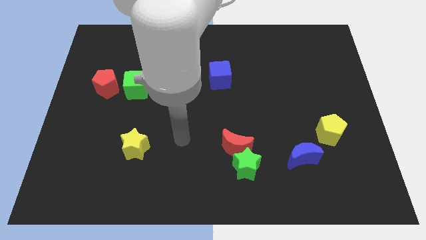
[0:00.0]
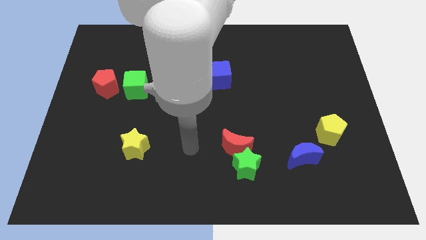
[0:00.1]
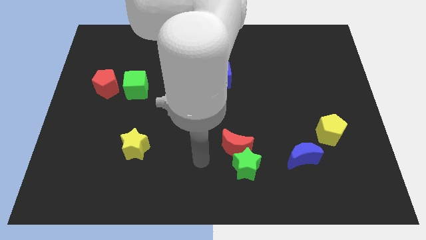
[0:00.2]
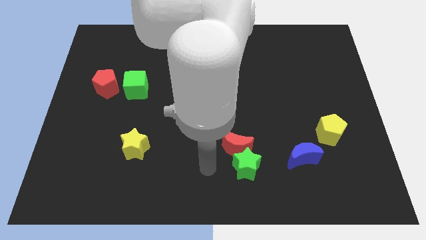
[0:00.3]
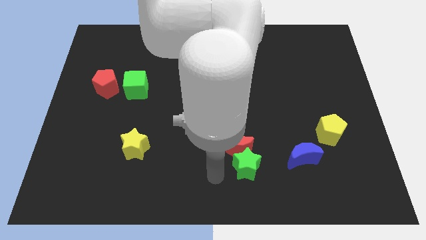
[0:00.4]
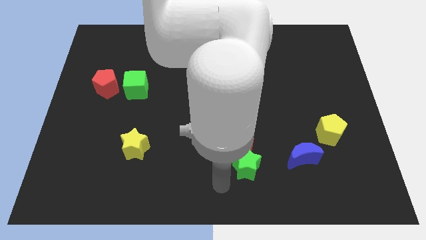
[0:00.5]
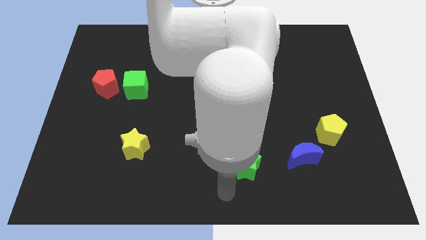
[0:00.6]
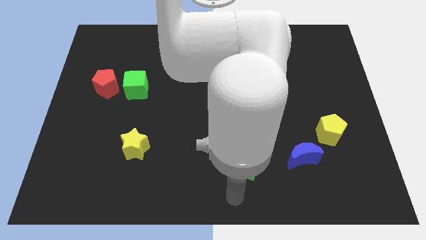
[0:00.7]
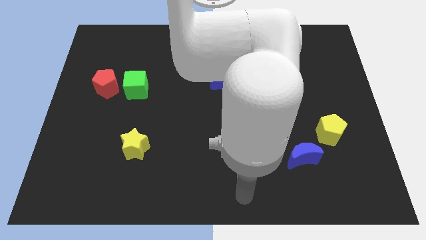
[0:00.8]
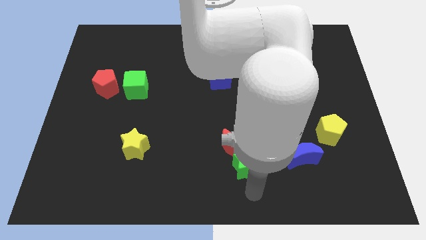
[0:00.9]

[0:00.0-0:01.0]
place the arm below the green star

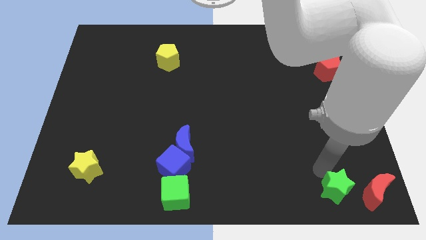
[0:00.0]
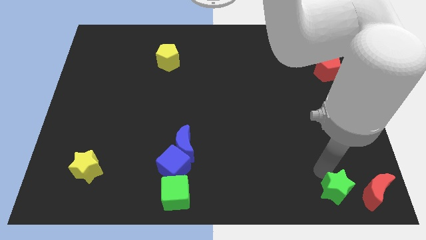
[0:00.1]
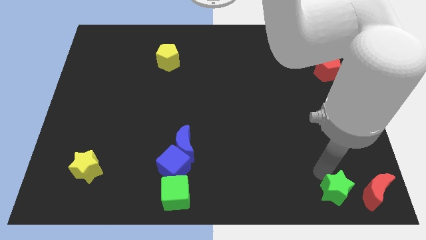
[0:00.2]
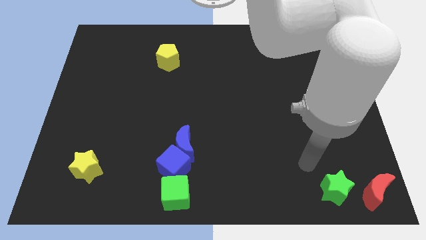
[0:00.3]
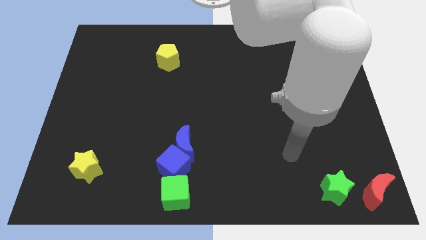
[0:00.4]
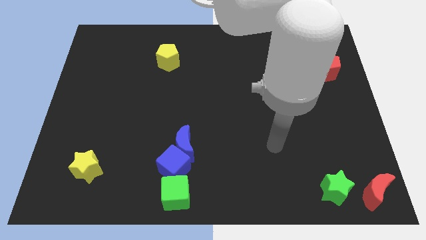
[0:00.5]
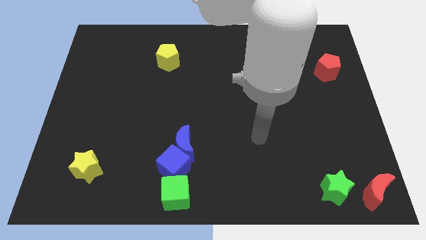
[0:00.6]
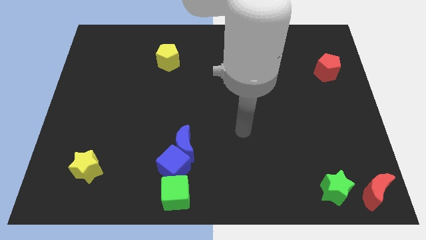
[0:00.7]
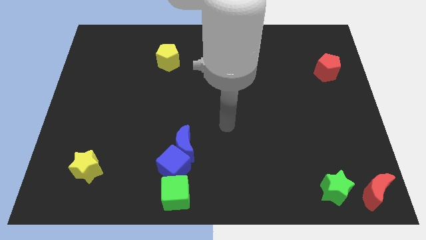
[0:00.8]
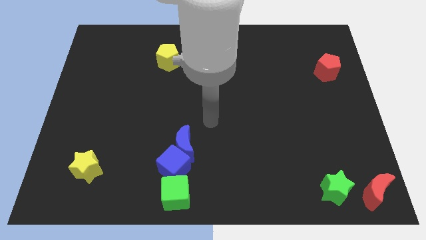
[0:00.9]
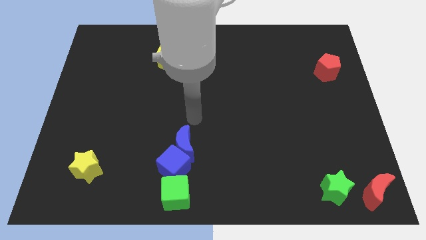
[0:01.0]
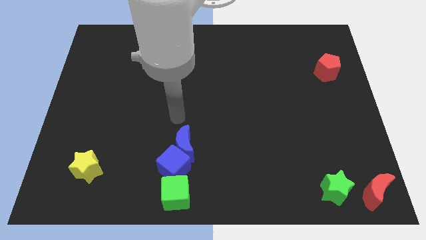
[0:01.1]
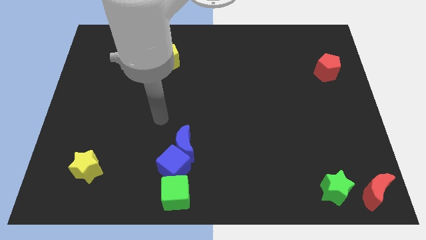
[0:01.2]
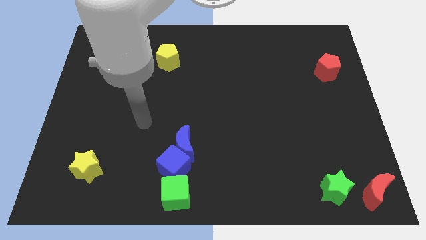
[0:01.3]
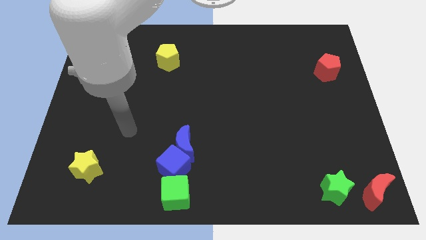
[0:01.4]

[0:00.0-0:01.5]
place your arm to the left side of the blue moon

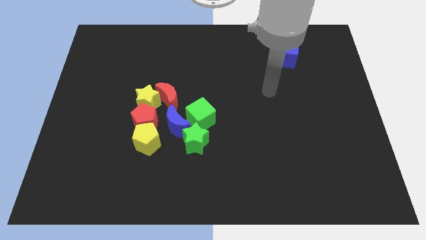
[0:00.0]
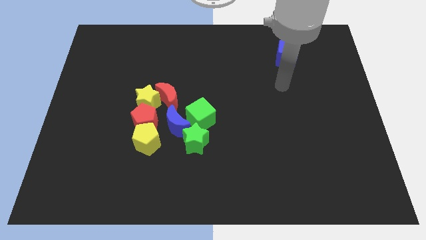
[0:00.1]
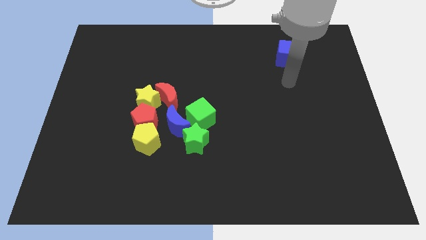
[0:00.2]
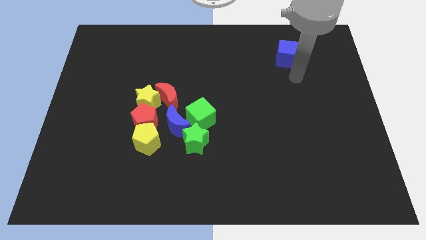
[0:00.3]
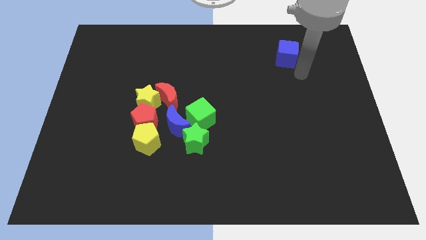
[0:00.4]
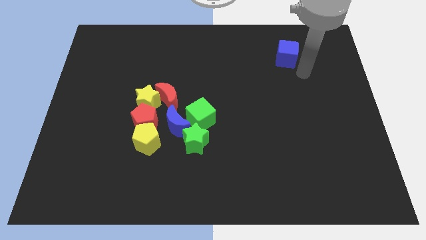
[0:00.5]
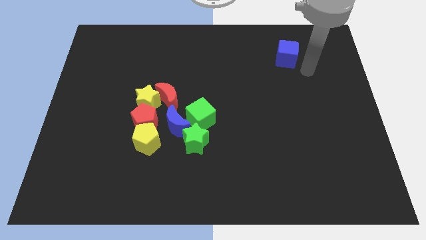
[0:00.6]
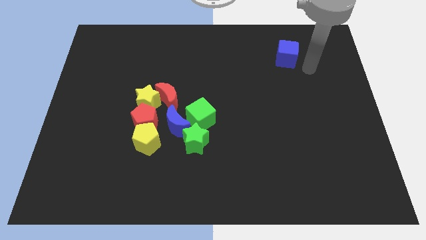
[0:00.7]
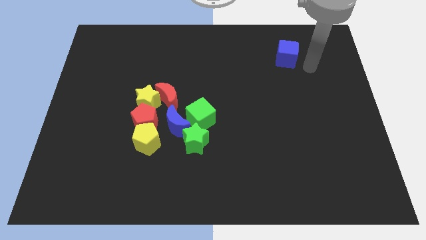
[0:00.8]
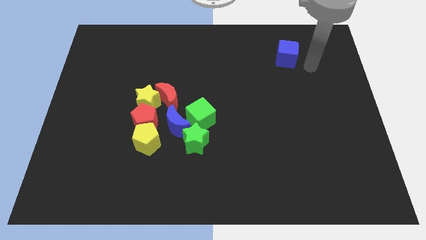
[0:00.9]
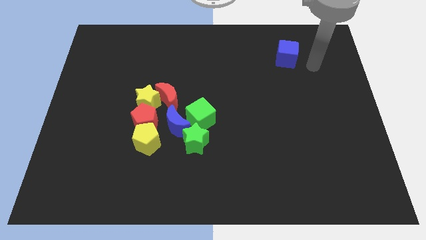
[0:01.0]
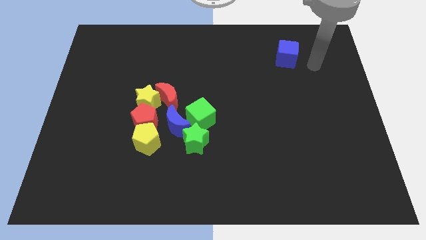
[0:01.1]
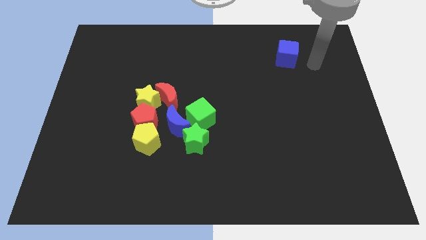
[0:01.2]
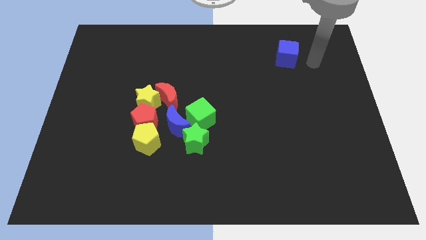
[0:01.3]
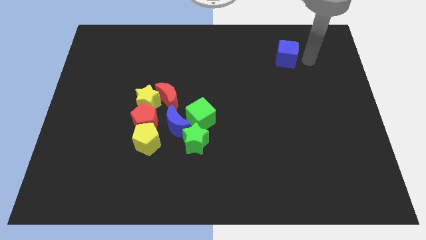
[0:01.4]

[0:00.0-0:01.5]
move the arm towards the right of the blue cube

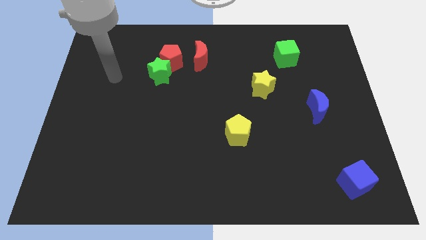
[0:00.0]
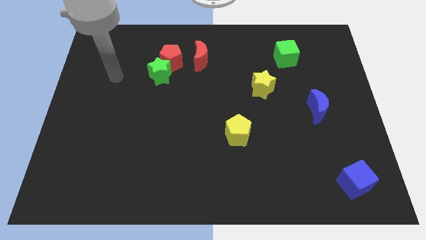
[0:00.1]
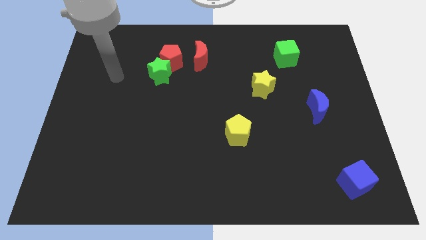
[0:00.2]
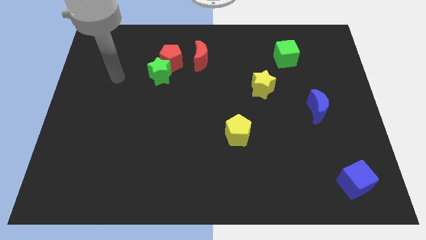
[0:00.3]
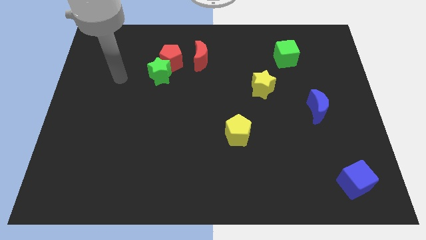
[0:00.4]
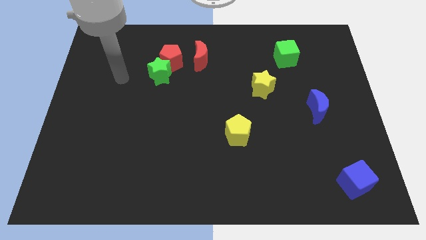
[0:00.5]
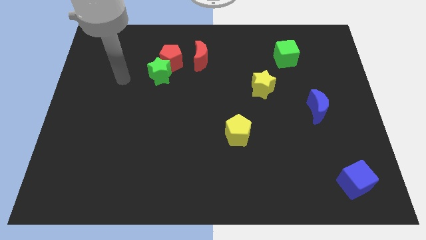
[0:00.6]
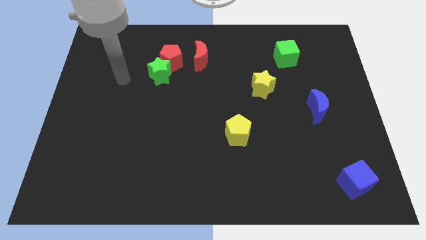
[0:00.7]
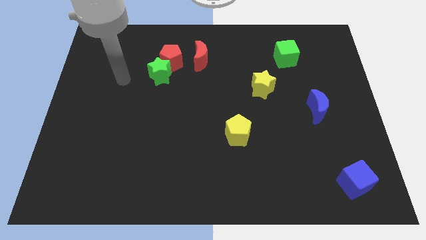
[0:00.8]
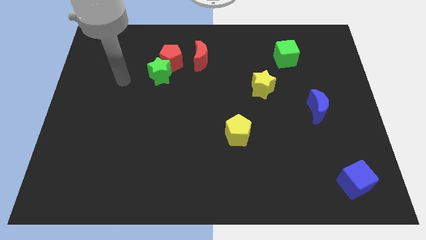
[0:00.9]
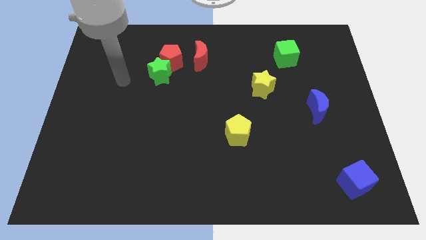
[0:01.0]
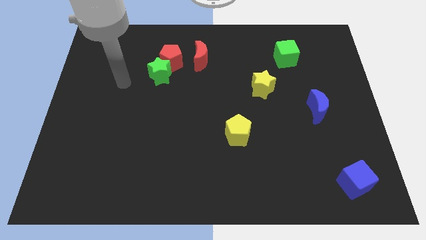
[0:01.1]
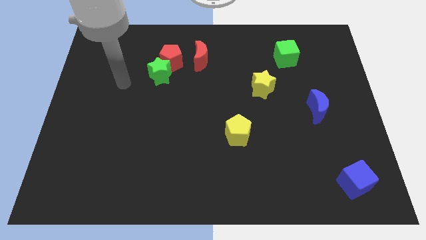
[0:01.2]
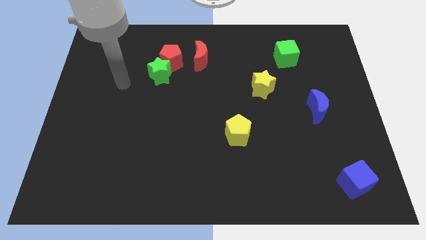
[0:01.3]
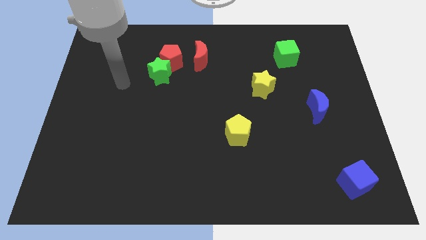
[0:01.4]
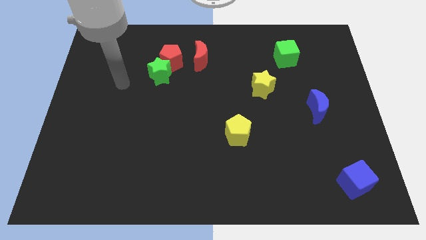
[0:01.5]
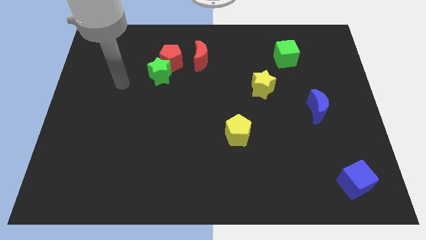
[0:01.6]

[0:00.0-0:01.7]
move the arm towards the green star of the board

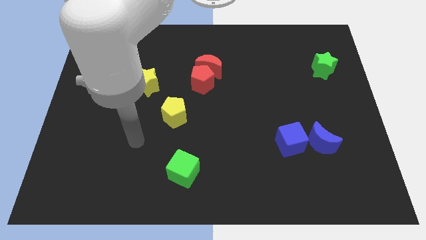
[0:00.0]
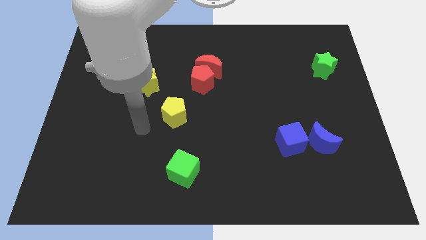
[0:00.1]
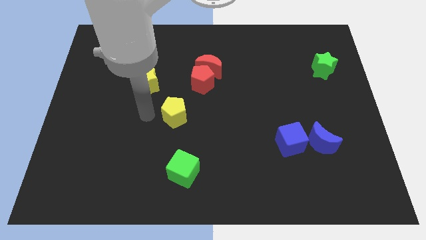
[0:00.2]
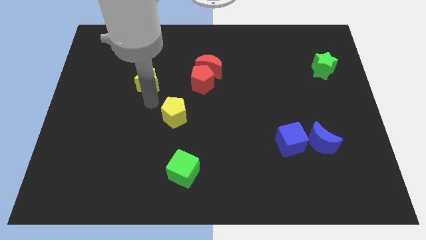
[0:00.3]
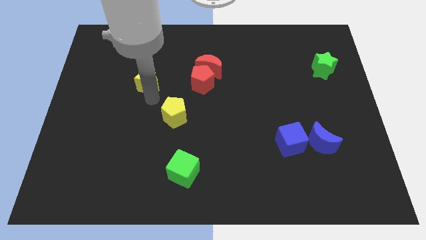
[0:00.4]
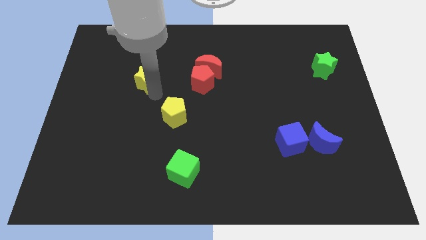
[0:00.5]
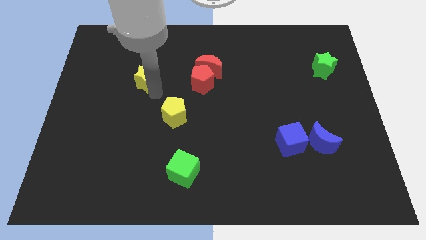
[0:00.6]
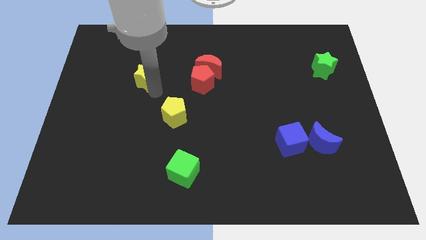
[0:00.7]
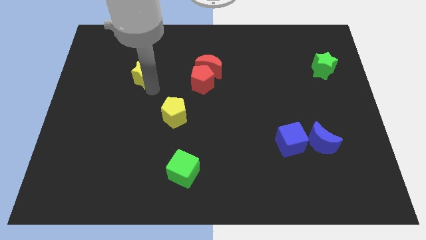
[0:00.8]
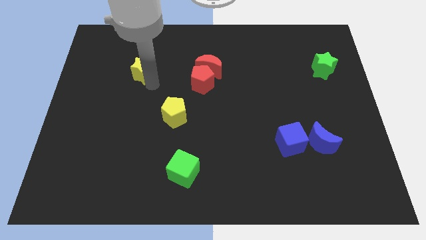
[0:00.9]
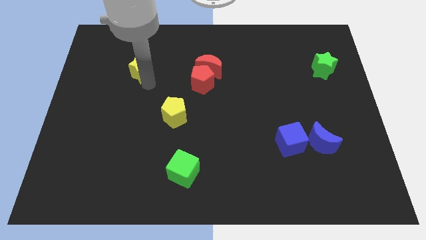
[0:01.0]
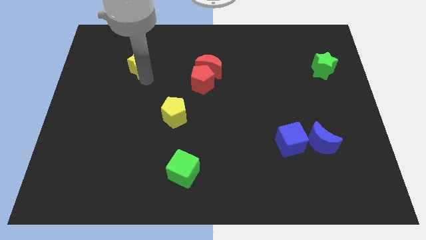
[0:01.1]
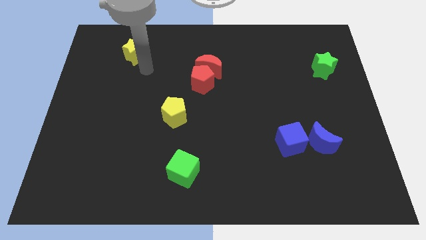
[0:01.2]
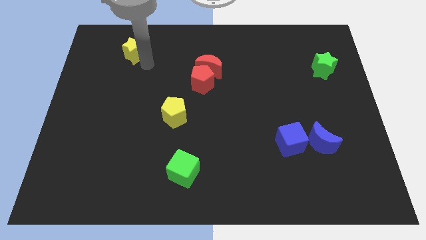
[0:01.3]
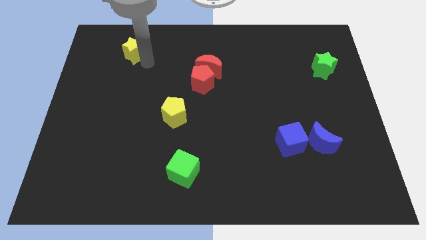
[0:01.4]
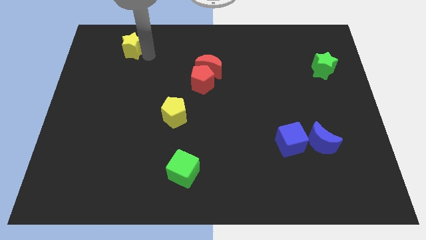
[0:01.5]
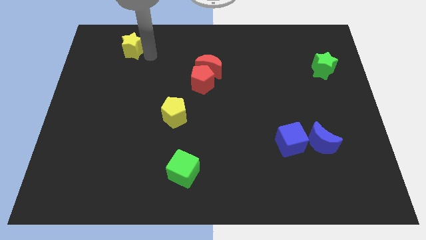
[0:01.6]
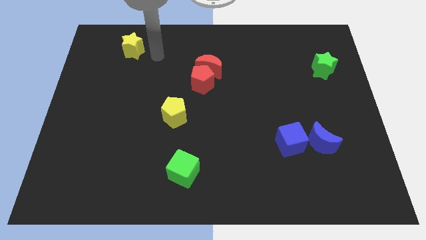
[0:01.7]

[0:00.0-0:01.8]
move the yellow star towards top left of the board

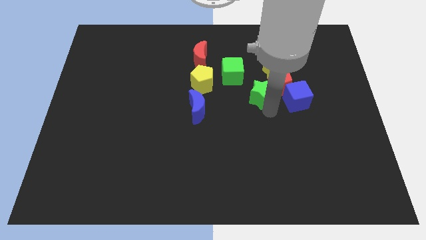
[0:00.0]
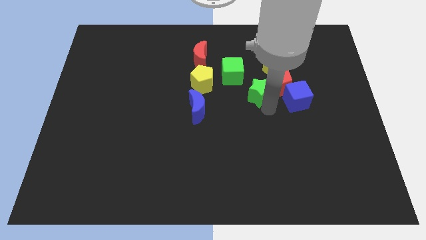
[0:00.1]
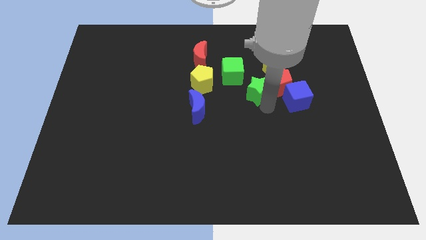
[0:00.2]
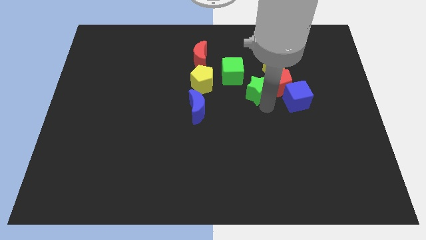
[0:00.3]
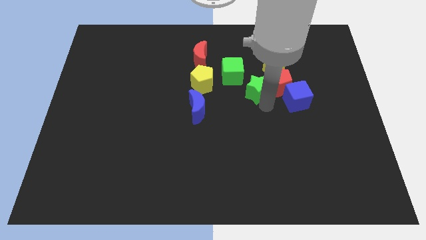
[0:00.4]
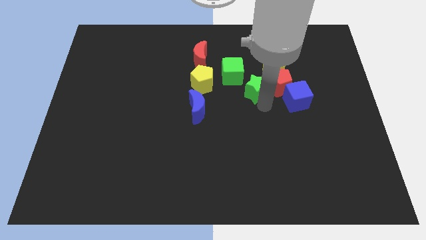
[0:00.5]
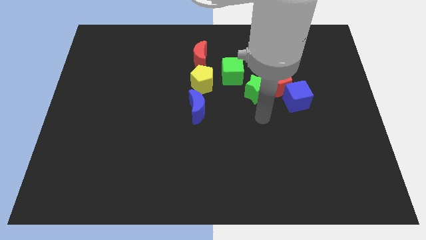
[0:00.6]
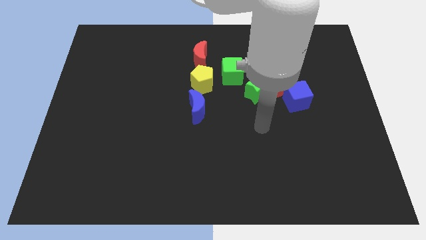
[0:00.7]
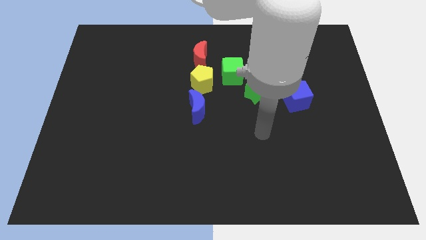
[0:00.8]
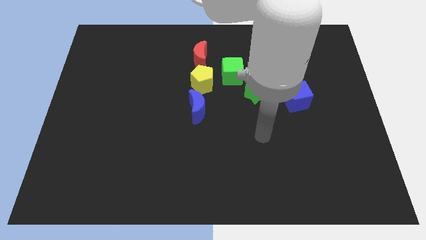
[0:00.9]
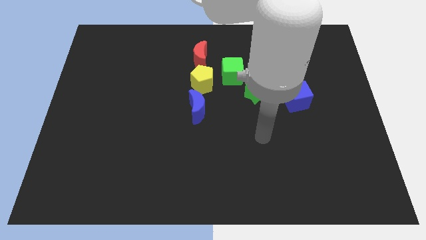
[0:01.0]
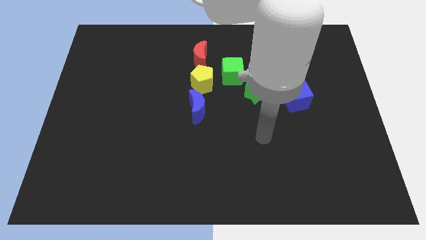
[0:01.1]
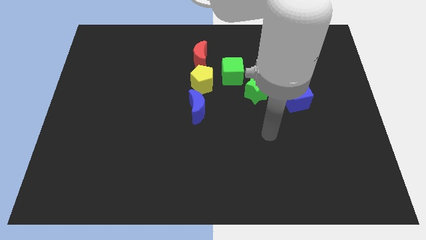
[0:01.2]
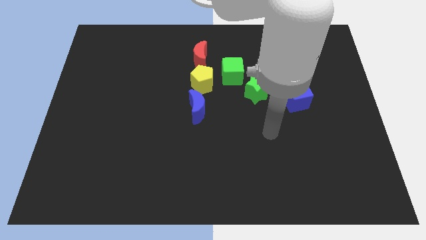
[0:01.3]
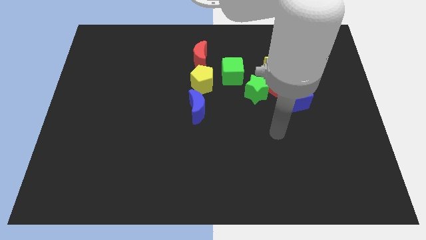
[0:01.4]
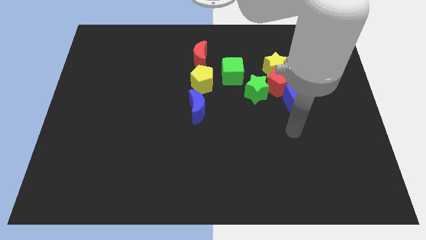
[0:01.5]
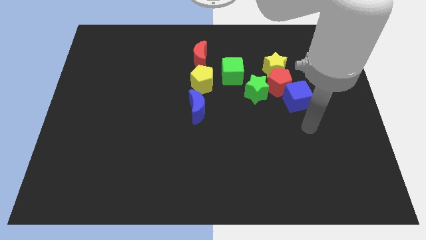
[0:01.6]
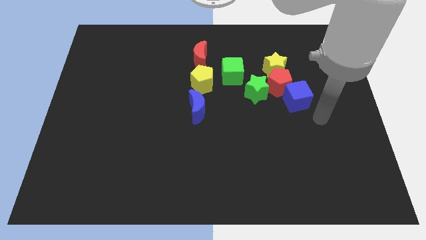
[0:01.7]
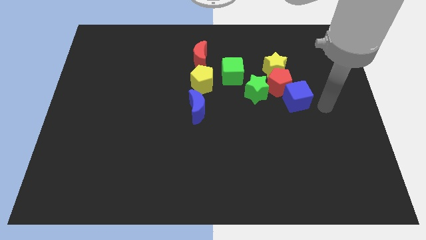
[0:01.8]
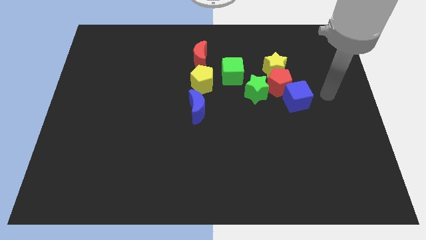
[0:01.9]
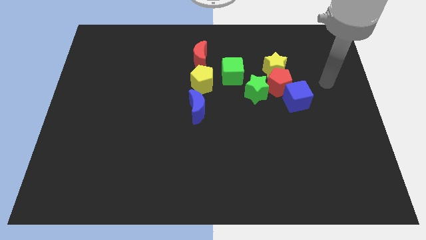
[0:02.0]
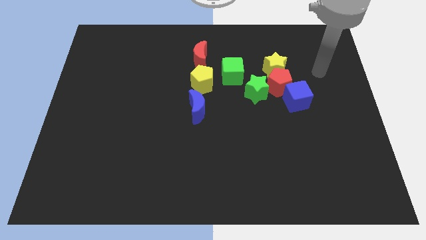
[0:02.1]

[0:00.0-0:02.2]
place green star left of red pentagon
